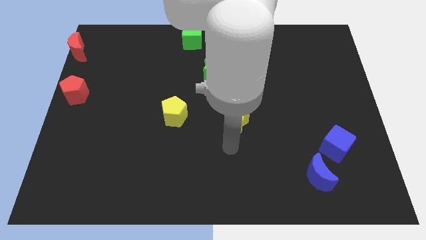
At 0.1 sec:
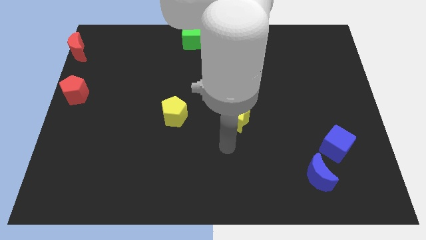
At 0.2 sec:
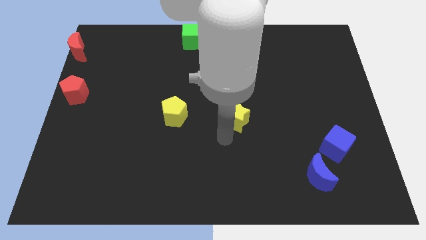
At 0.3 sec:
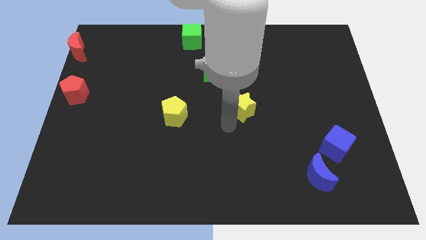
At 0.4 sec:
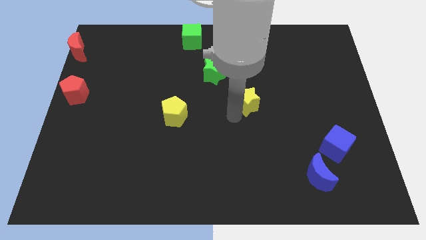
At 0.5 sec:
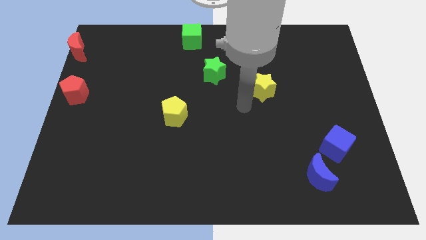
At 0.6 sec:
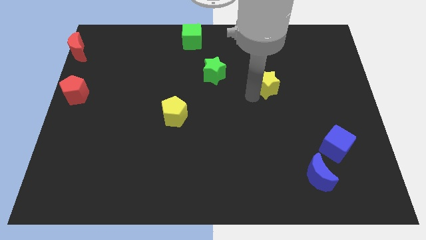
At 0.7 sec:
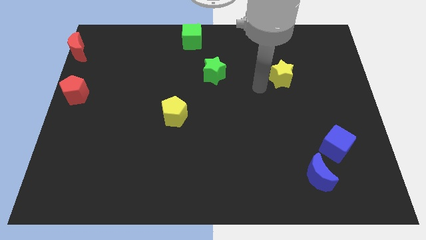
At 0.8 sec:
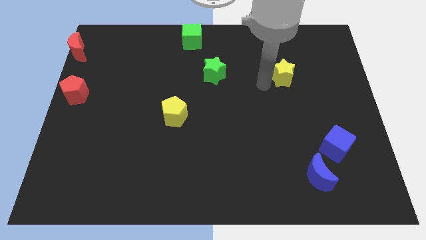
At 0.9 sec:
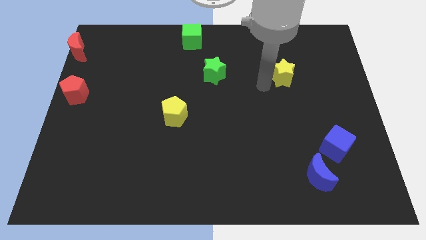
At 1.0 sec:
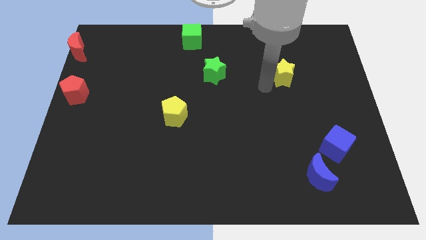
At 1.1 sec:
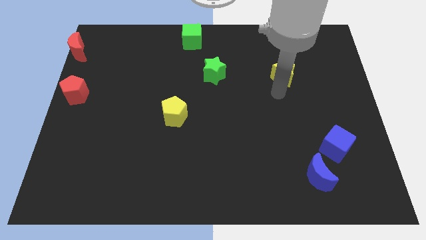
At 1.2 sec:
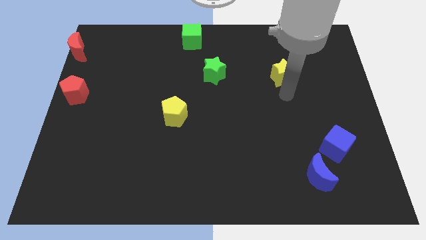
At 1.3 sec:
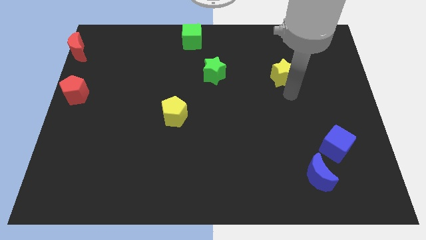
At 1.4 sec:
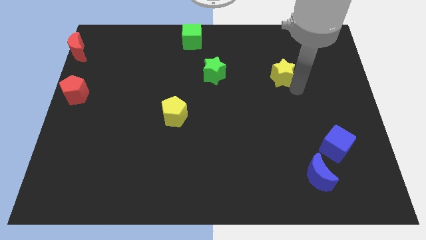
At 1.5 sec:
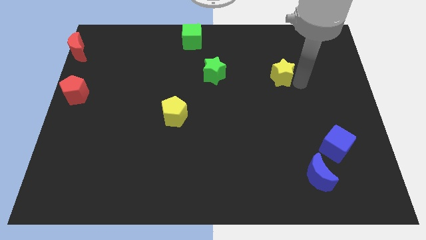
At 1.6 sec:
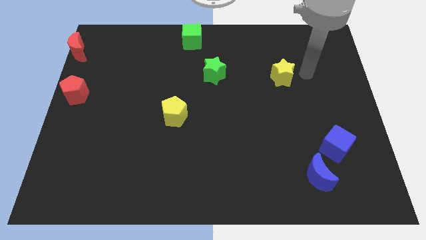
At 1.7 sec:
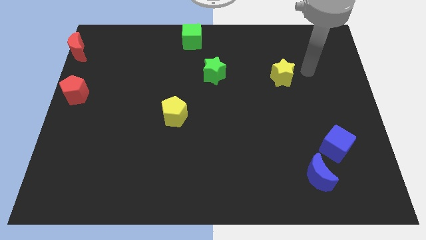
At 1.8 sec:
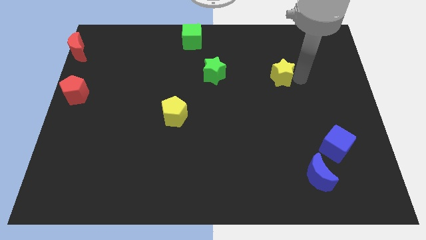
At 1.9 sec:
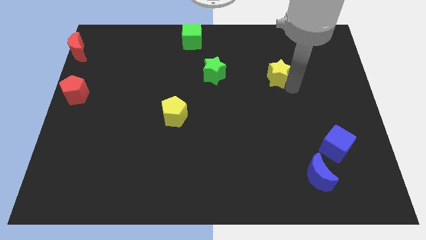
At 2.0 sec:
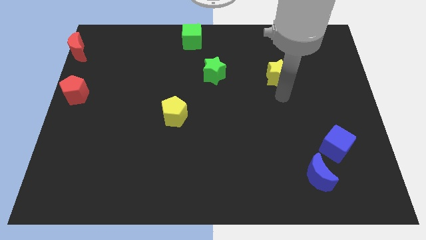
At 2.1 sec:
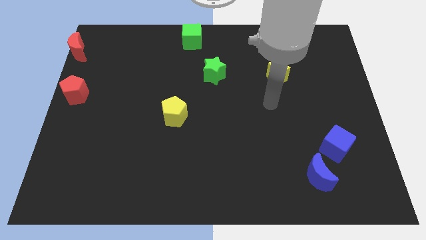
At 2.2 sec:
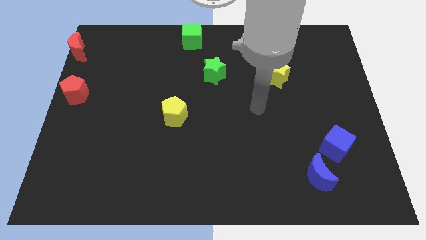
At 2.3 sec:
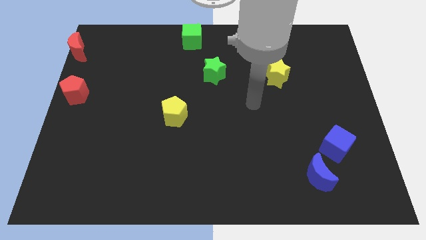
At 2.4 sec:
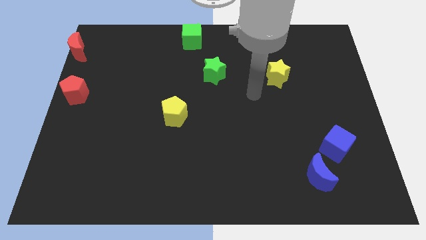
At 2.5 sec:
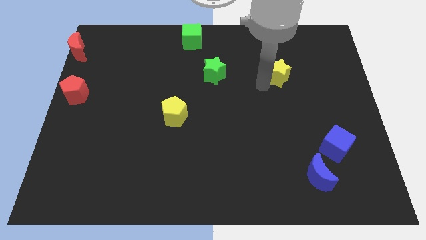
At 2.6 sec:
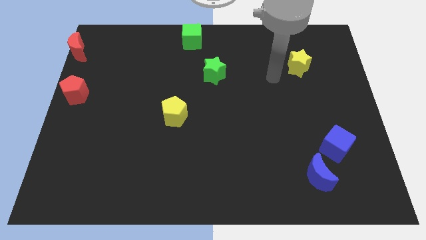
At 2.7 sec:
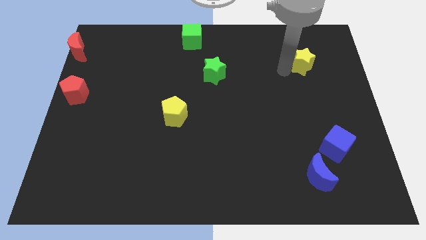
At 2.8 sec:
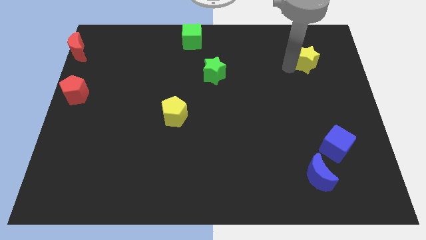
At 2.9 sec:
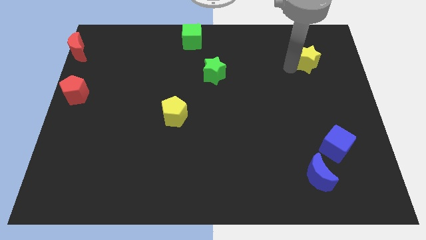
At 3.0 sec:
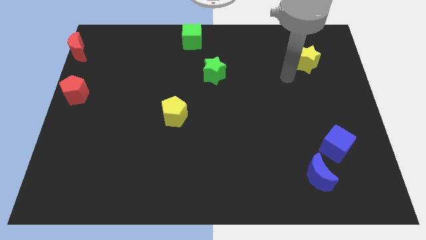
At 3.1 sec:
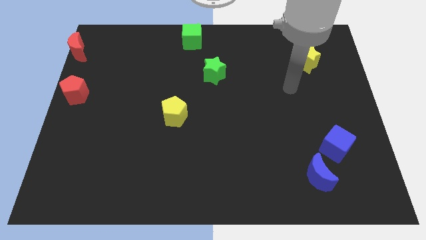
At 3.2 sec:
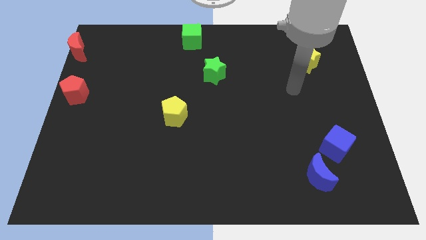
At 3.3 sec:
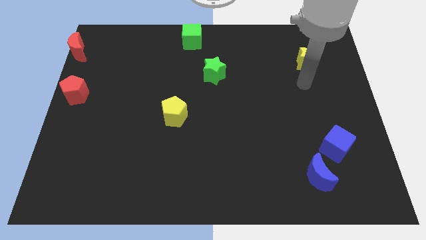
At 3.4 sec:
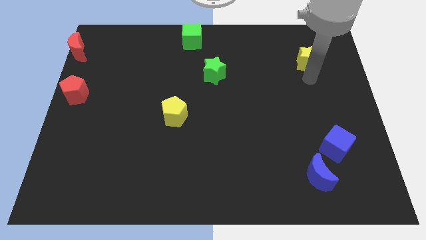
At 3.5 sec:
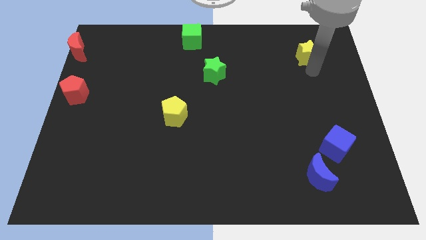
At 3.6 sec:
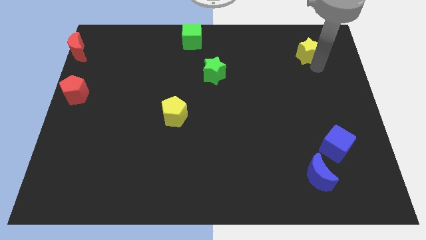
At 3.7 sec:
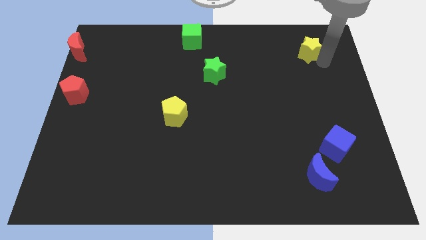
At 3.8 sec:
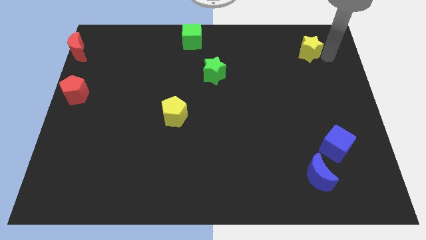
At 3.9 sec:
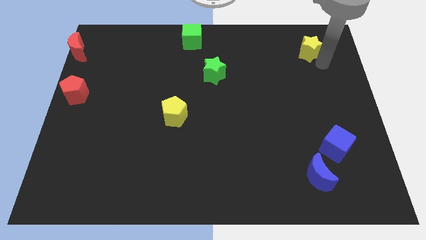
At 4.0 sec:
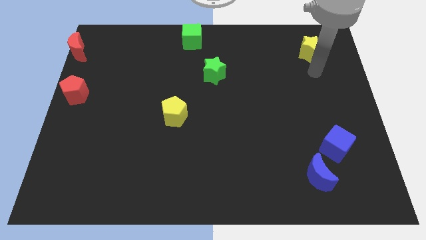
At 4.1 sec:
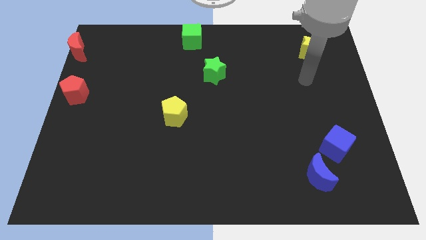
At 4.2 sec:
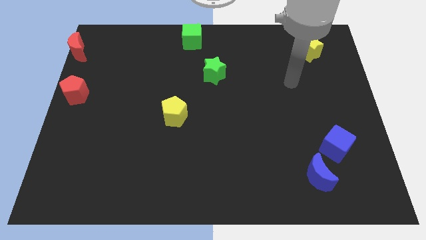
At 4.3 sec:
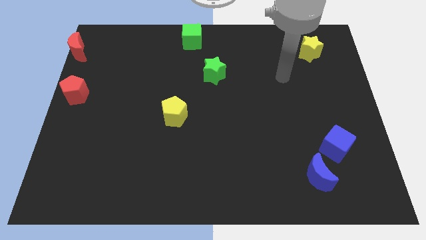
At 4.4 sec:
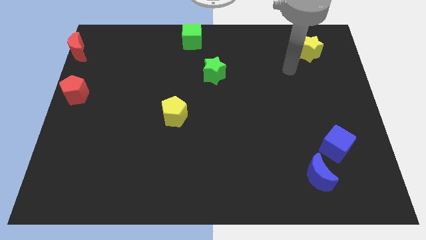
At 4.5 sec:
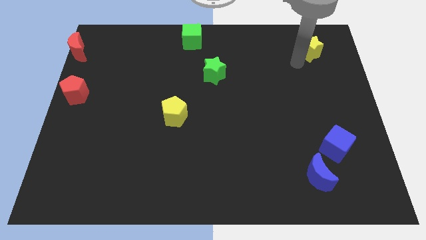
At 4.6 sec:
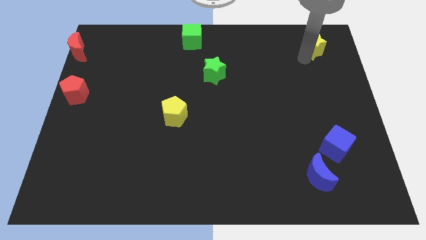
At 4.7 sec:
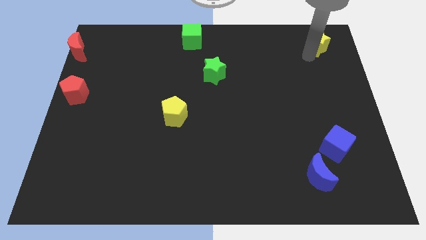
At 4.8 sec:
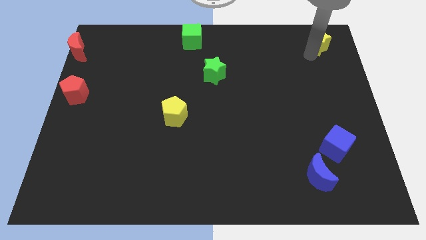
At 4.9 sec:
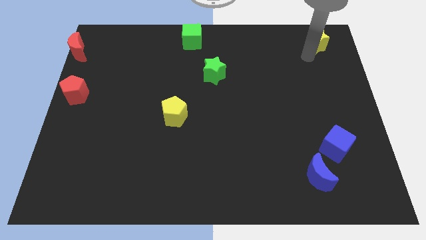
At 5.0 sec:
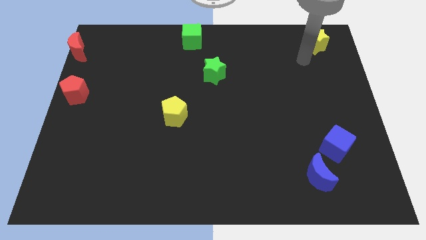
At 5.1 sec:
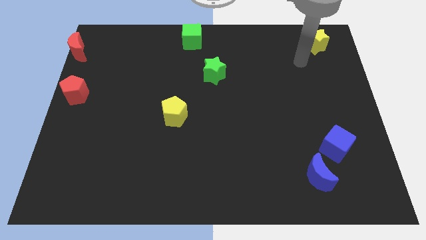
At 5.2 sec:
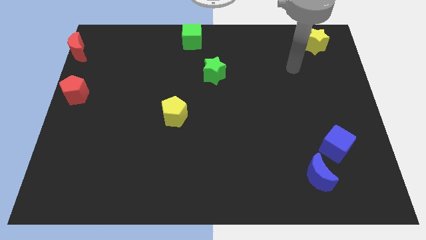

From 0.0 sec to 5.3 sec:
push the yellow star towards the top right side of the board

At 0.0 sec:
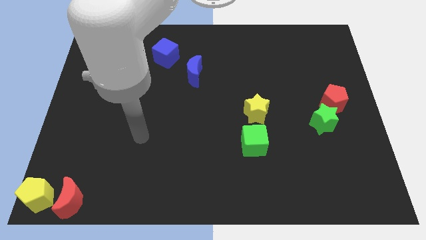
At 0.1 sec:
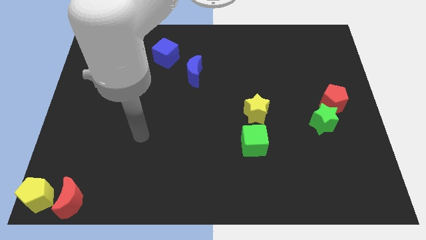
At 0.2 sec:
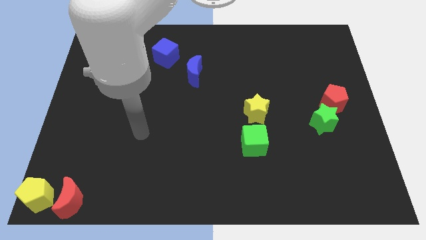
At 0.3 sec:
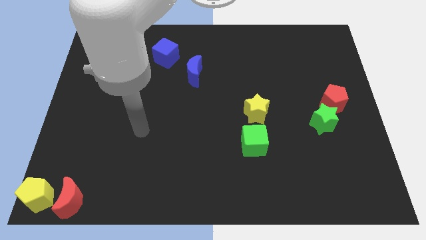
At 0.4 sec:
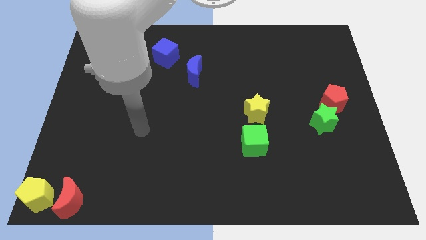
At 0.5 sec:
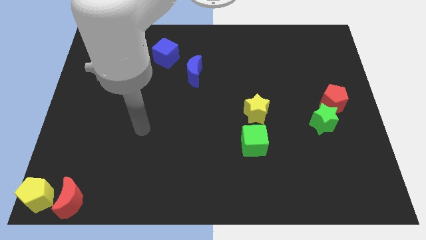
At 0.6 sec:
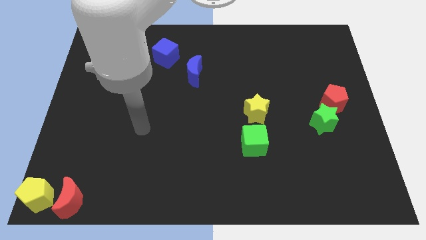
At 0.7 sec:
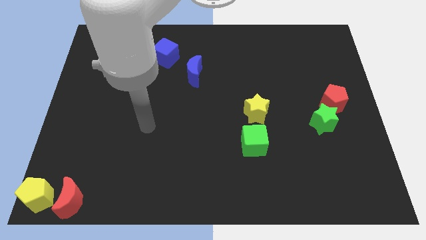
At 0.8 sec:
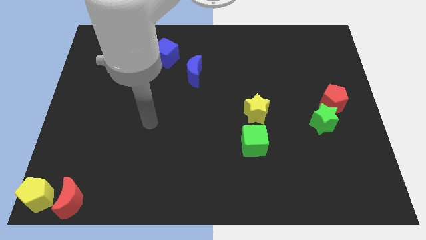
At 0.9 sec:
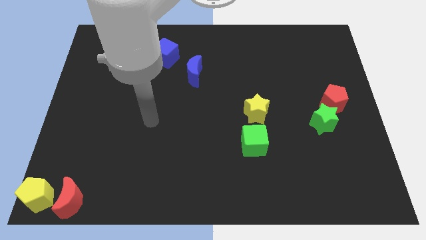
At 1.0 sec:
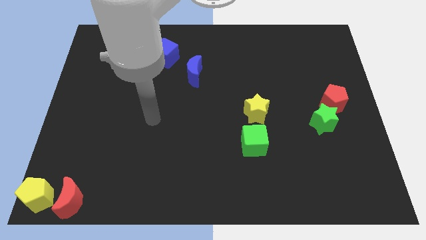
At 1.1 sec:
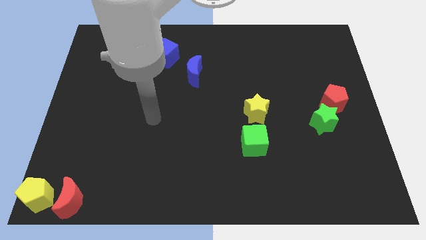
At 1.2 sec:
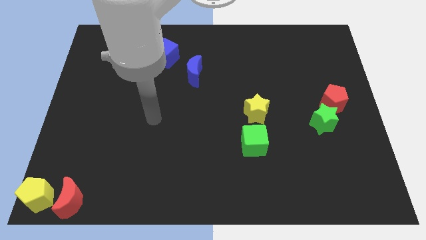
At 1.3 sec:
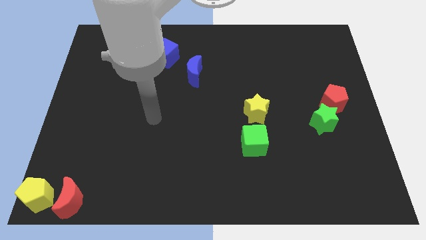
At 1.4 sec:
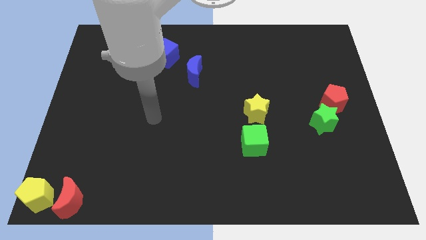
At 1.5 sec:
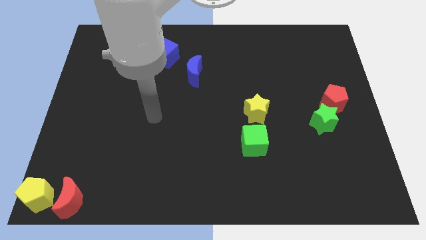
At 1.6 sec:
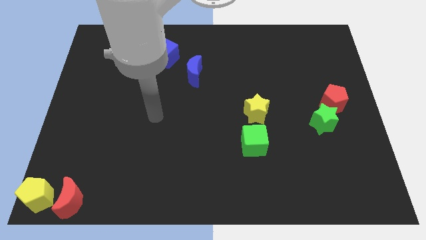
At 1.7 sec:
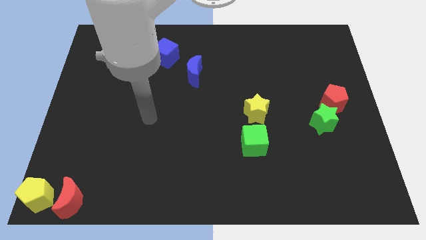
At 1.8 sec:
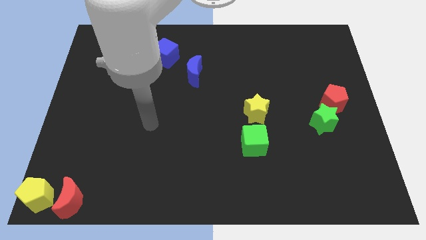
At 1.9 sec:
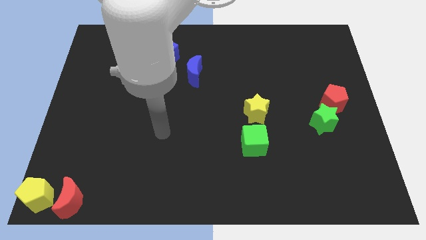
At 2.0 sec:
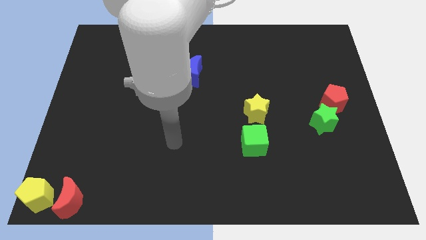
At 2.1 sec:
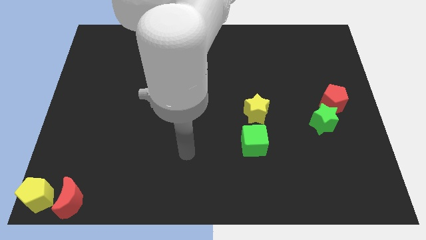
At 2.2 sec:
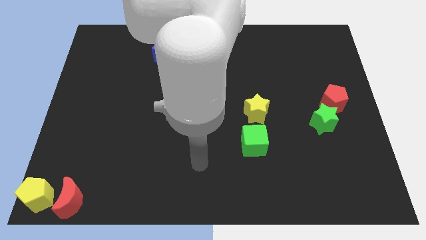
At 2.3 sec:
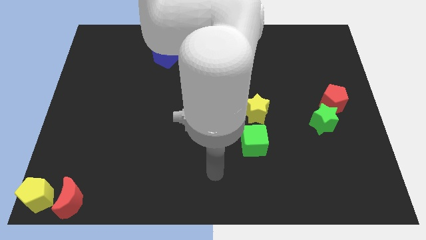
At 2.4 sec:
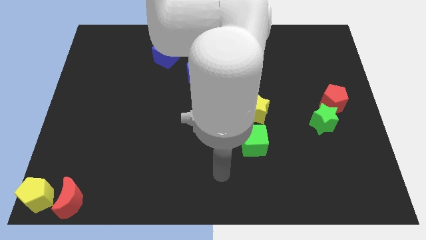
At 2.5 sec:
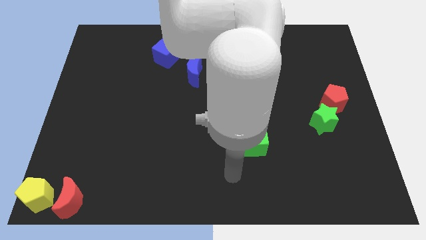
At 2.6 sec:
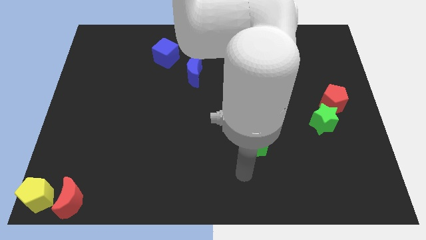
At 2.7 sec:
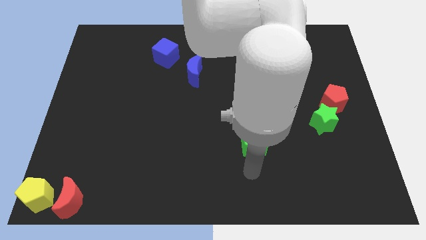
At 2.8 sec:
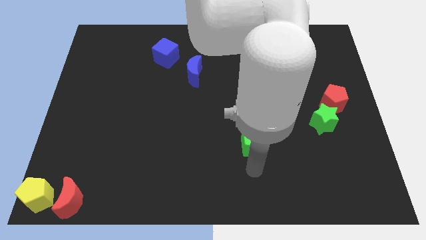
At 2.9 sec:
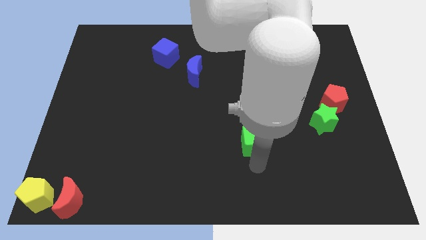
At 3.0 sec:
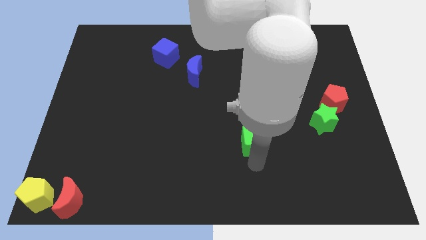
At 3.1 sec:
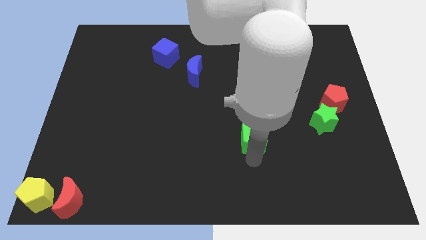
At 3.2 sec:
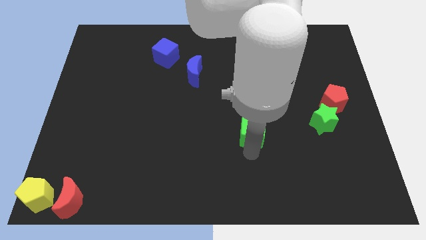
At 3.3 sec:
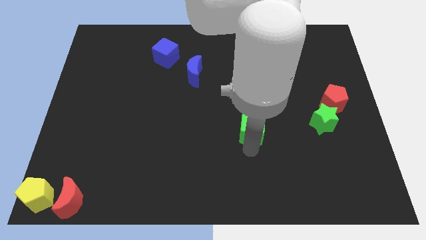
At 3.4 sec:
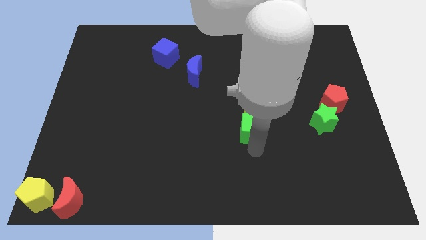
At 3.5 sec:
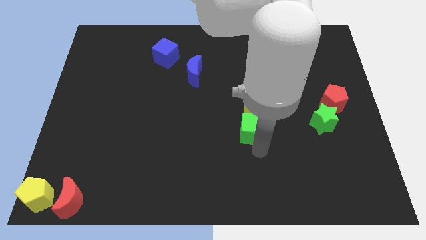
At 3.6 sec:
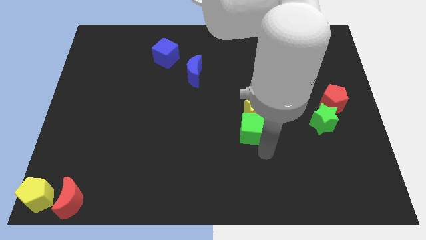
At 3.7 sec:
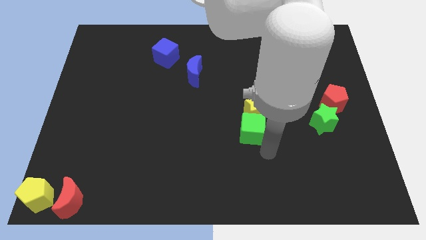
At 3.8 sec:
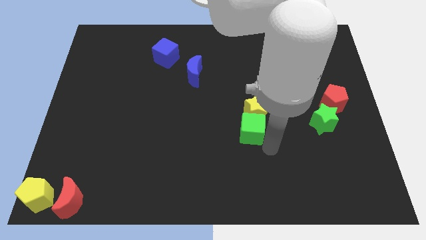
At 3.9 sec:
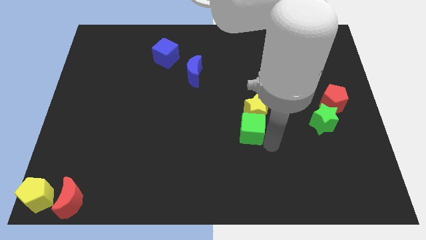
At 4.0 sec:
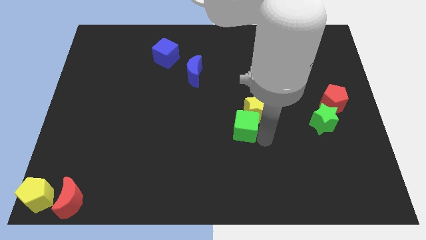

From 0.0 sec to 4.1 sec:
push the yellow star with the green cube towards the center of the board
